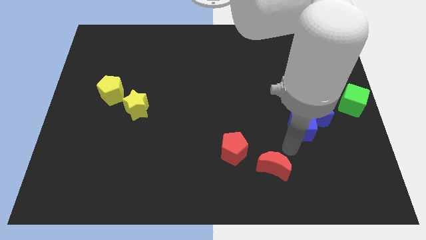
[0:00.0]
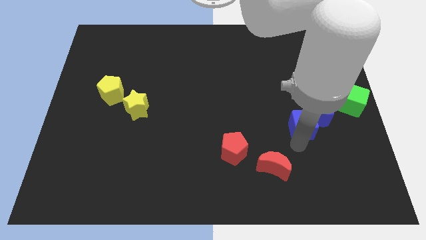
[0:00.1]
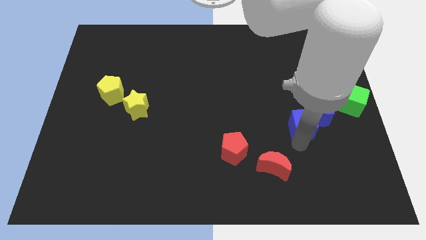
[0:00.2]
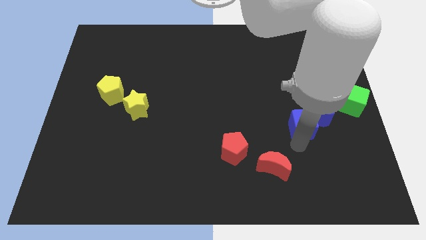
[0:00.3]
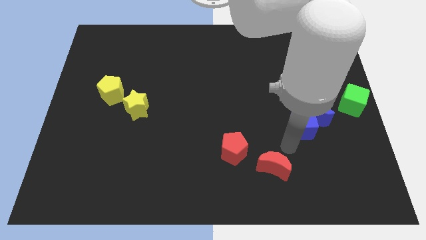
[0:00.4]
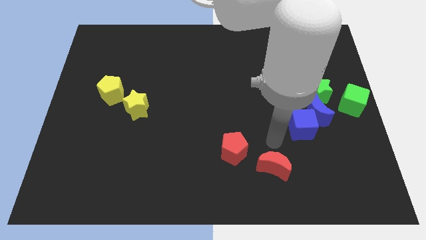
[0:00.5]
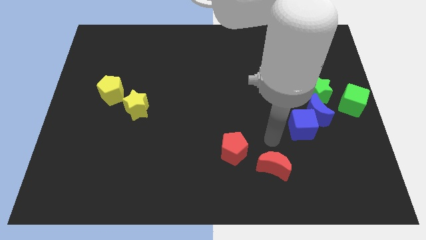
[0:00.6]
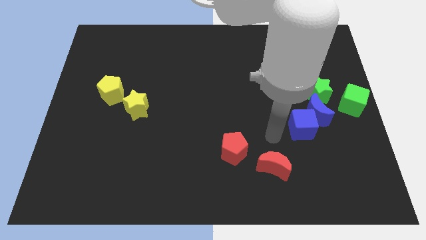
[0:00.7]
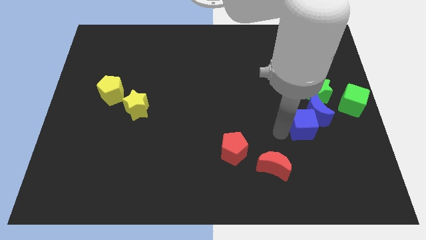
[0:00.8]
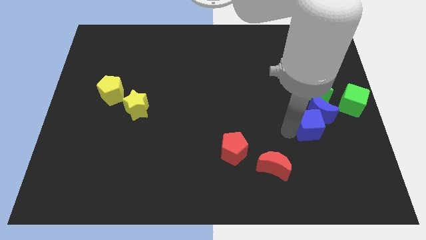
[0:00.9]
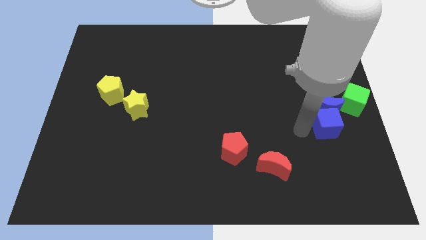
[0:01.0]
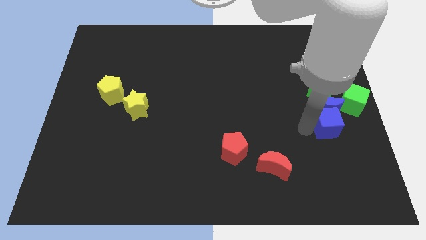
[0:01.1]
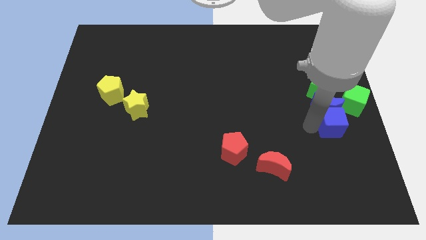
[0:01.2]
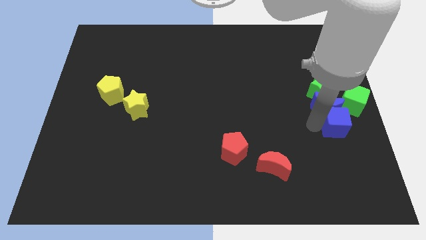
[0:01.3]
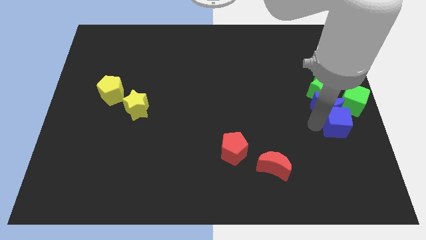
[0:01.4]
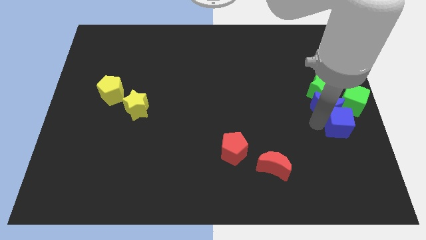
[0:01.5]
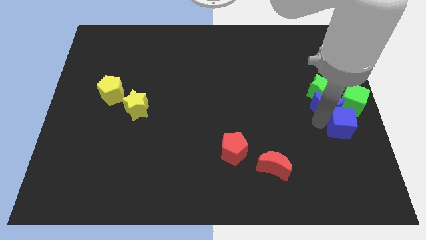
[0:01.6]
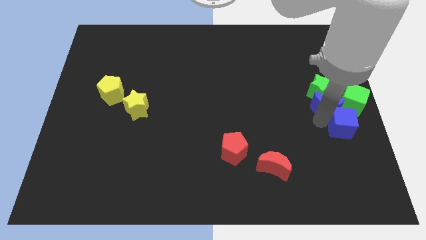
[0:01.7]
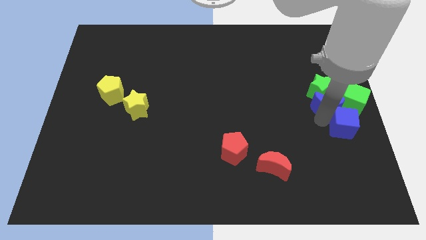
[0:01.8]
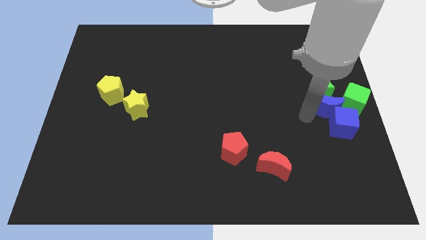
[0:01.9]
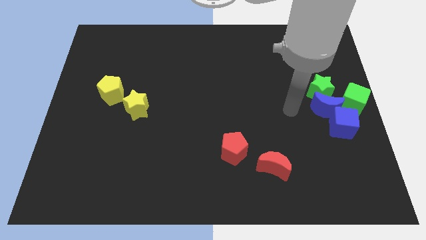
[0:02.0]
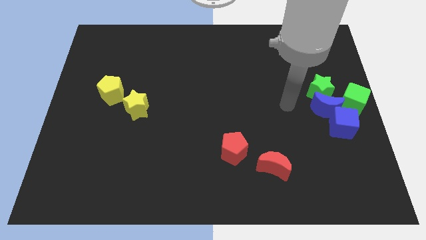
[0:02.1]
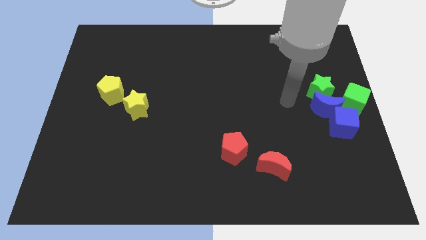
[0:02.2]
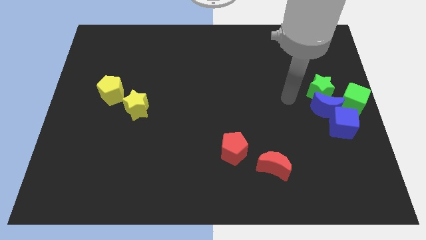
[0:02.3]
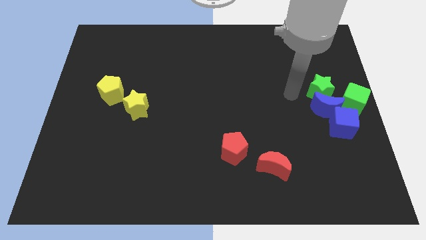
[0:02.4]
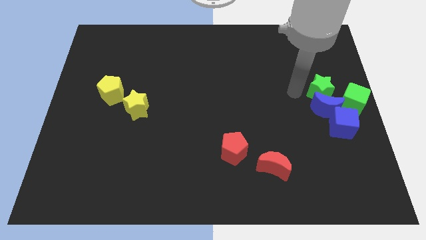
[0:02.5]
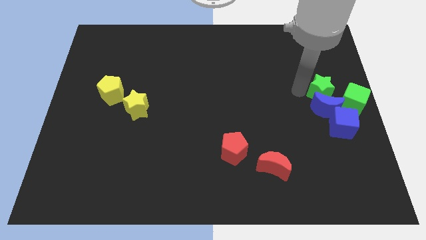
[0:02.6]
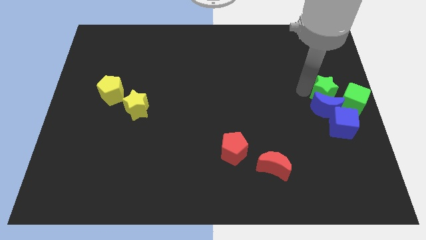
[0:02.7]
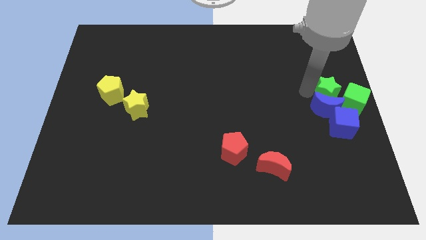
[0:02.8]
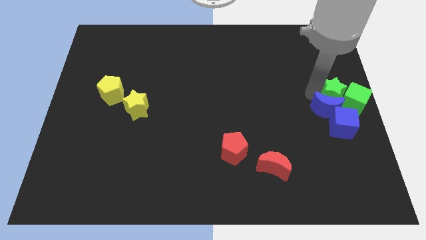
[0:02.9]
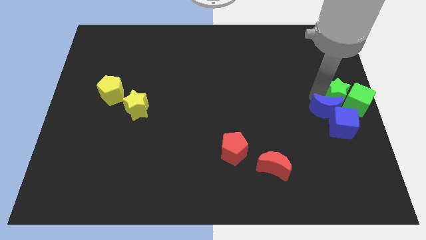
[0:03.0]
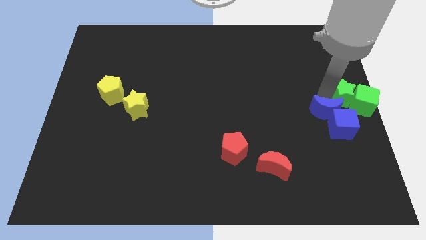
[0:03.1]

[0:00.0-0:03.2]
make the blue and green blocks together

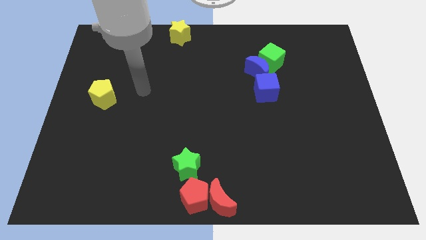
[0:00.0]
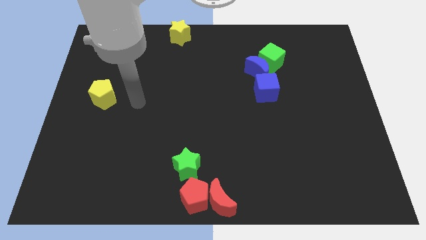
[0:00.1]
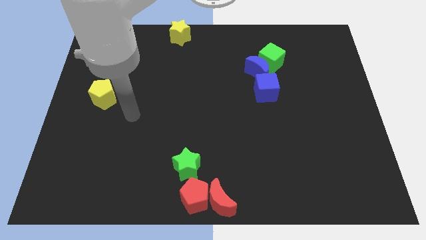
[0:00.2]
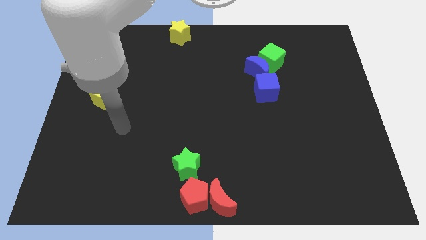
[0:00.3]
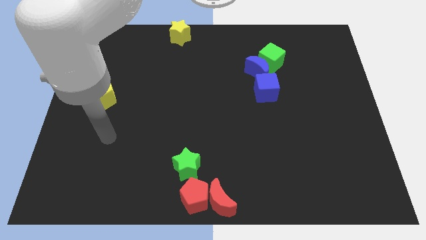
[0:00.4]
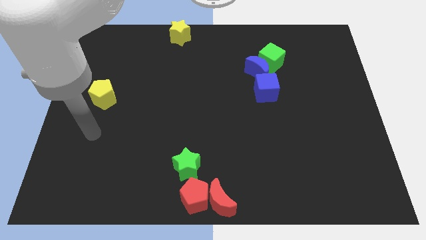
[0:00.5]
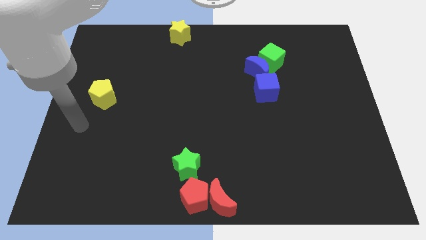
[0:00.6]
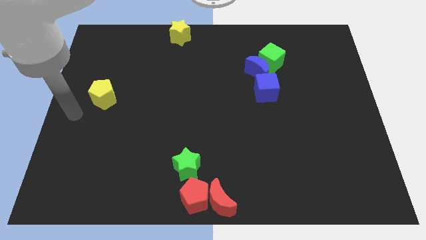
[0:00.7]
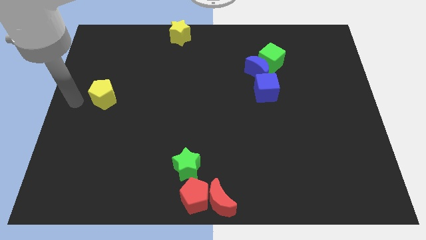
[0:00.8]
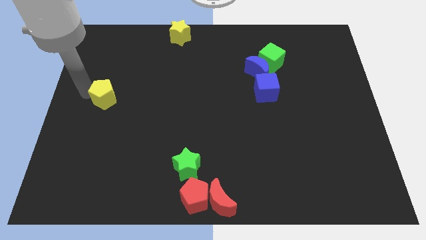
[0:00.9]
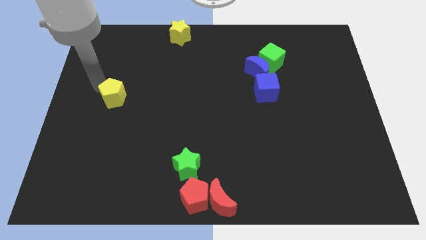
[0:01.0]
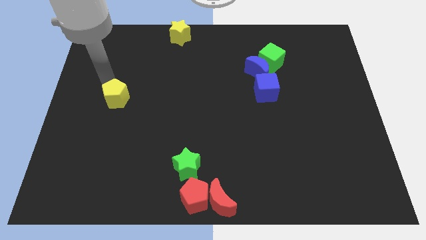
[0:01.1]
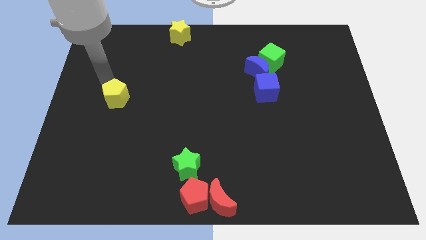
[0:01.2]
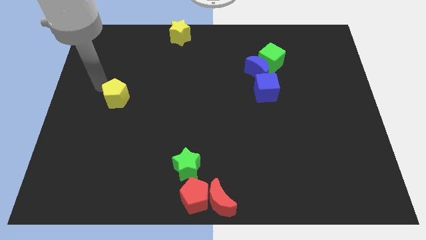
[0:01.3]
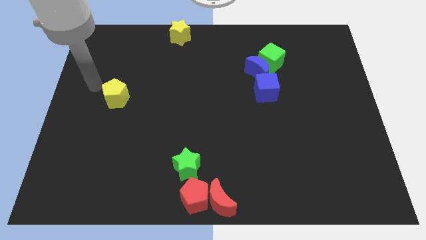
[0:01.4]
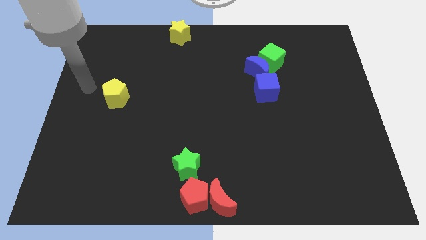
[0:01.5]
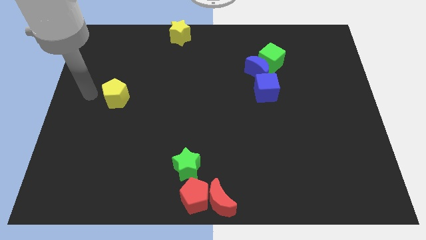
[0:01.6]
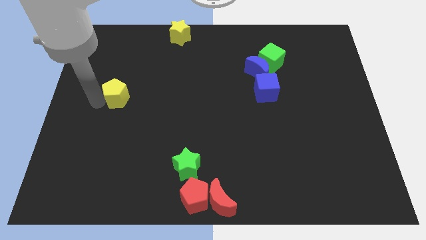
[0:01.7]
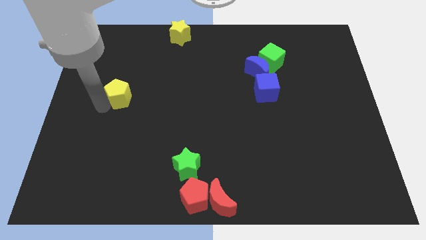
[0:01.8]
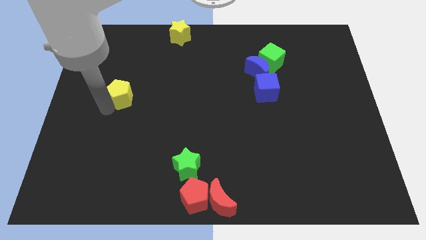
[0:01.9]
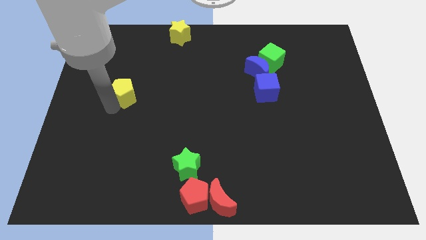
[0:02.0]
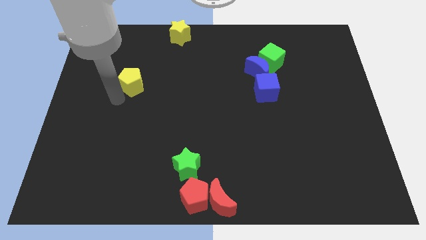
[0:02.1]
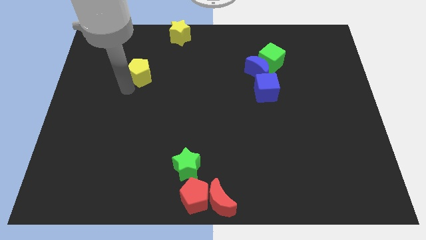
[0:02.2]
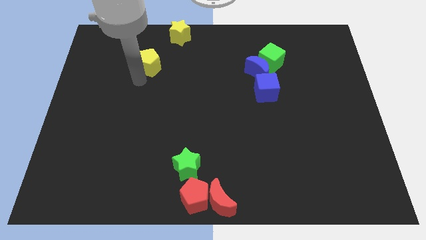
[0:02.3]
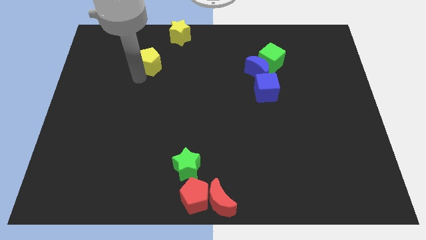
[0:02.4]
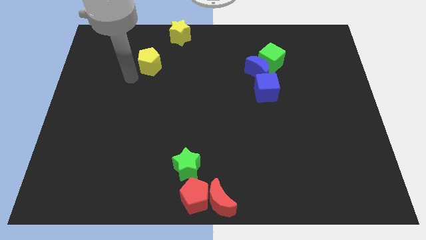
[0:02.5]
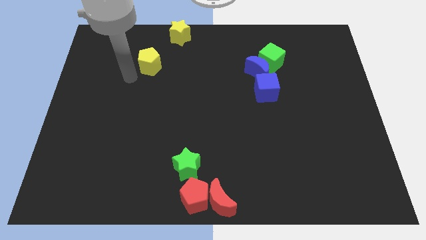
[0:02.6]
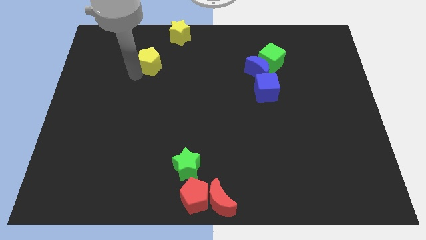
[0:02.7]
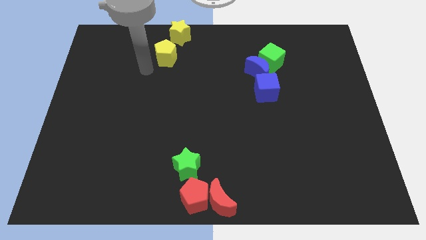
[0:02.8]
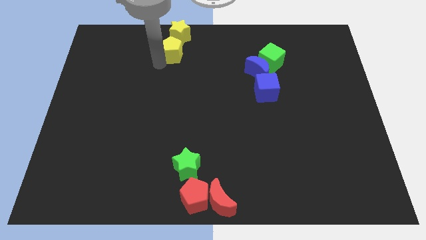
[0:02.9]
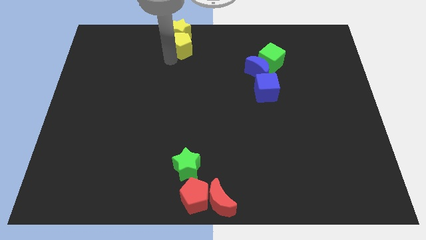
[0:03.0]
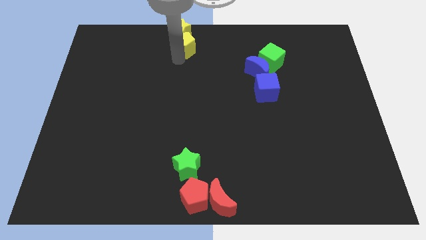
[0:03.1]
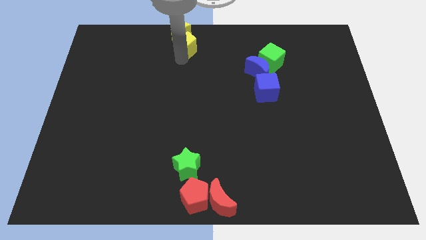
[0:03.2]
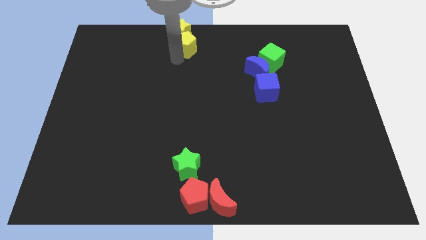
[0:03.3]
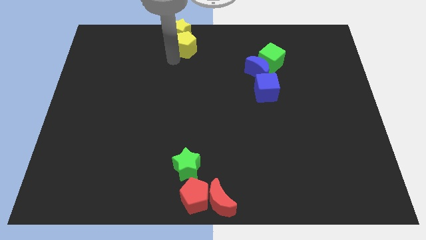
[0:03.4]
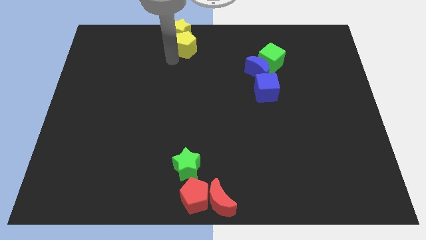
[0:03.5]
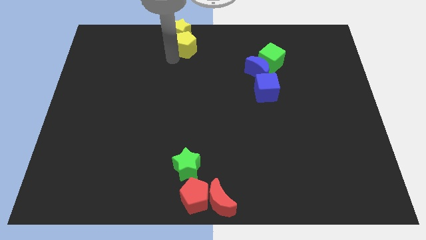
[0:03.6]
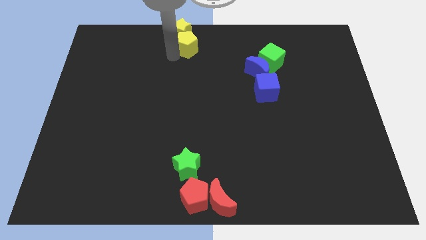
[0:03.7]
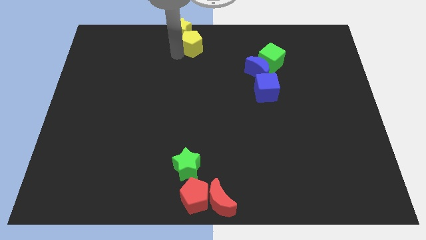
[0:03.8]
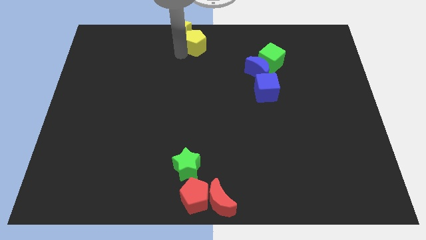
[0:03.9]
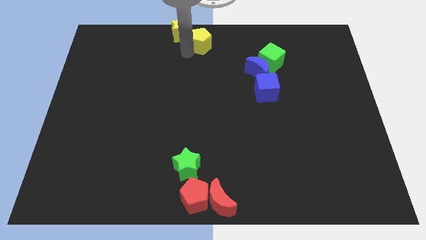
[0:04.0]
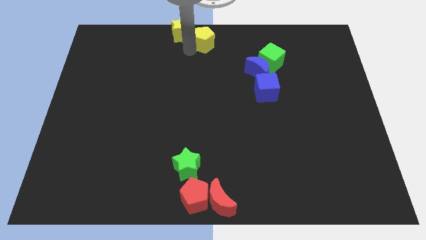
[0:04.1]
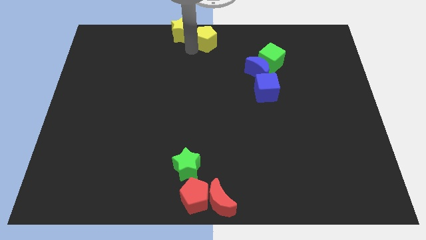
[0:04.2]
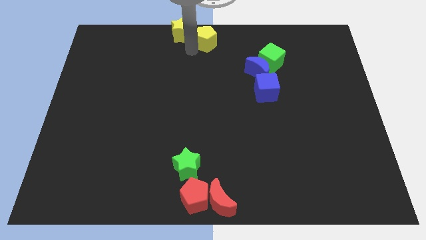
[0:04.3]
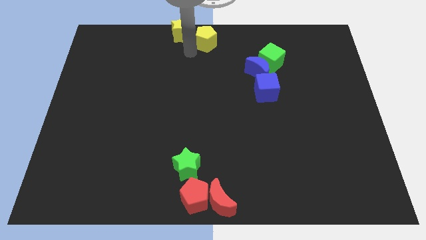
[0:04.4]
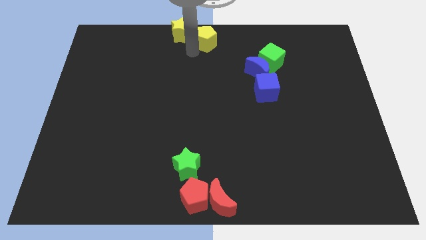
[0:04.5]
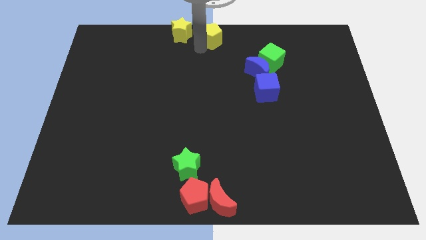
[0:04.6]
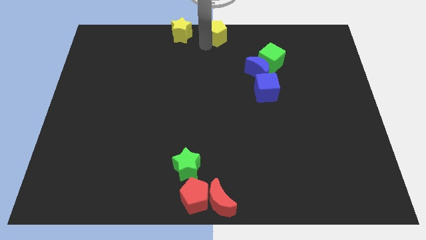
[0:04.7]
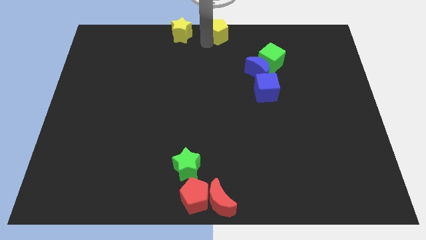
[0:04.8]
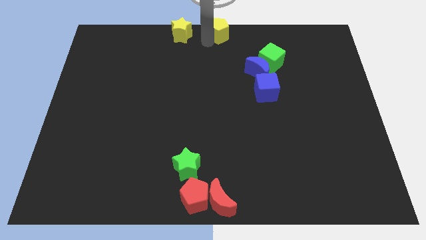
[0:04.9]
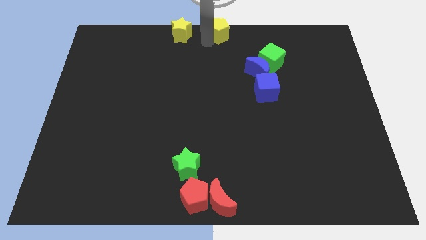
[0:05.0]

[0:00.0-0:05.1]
place the yellow pentagon to the right of the yellow star

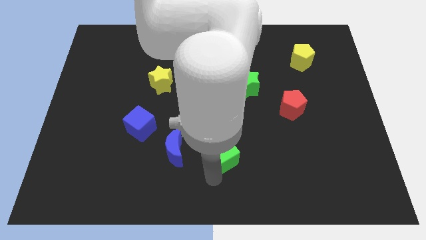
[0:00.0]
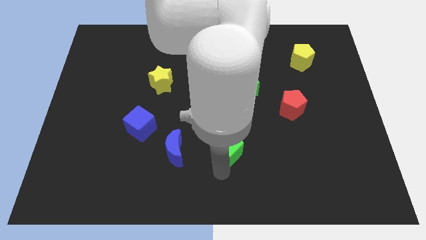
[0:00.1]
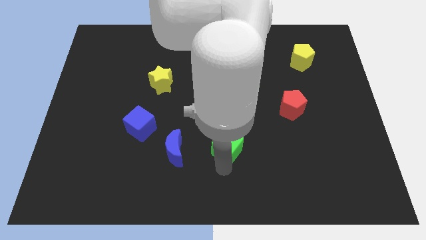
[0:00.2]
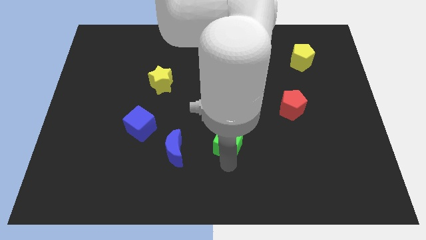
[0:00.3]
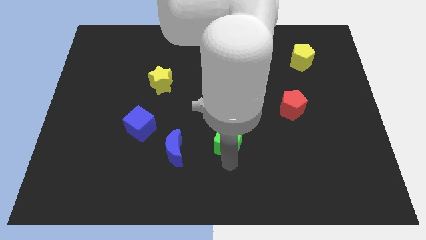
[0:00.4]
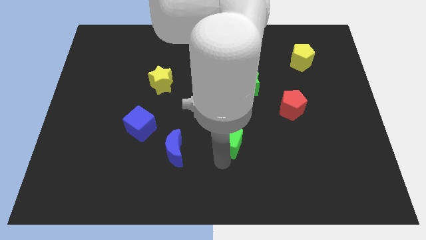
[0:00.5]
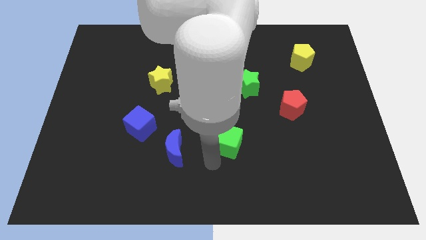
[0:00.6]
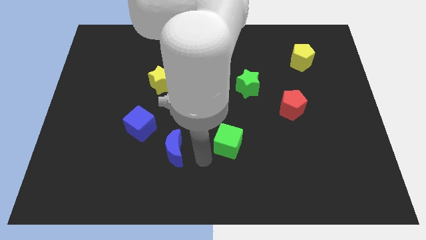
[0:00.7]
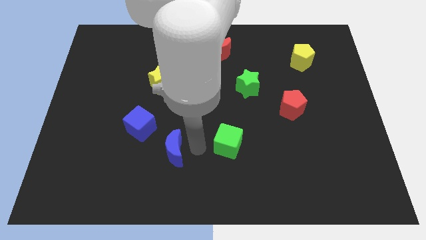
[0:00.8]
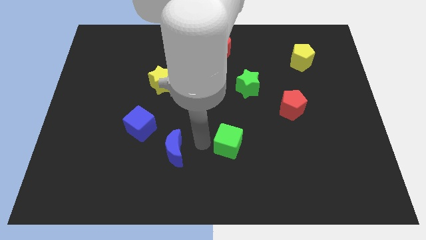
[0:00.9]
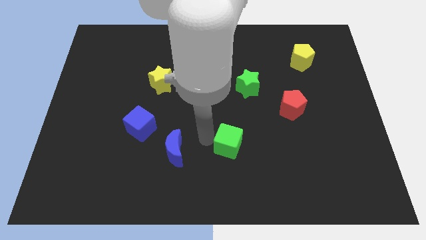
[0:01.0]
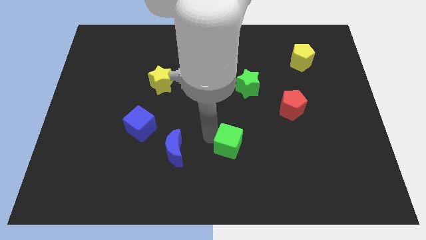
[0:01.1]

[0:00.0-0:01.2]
push the green cube upwards
